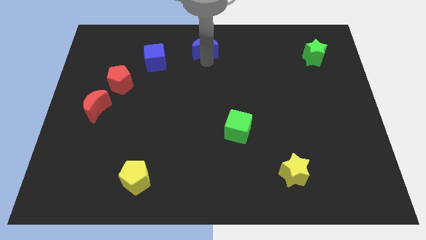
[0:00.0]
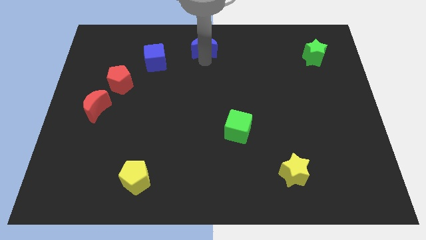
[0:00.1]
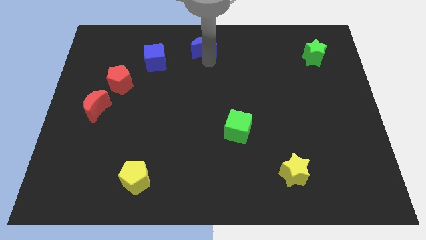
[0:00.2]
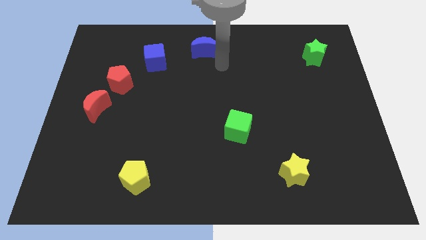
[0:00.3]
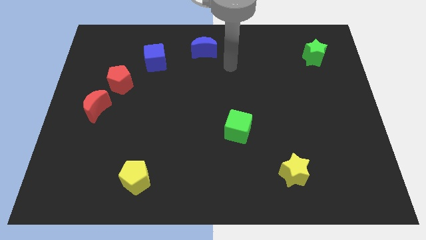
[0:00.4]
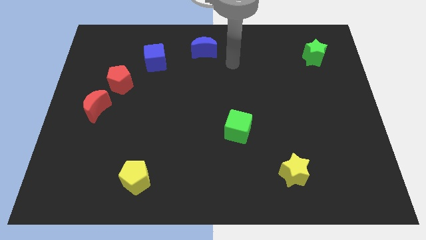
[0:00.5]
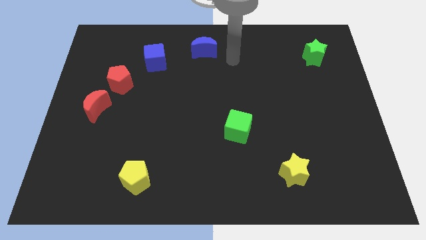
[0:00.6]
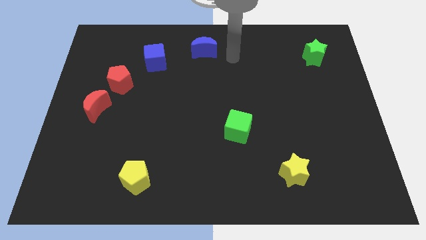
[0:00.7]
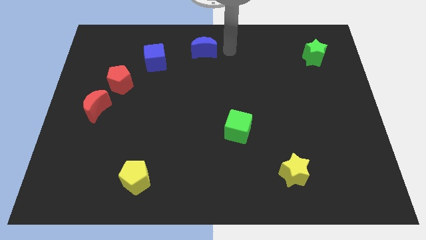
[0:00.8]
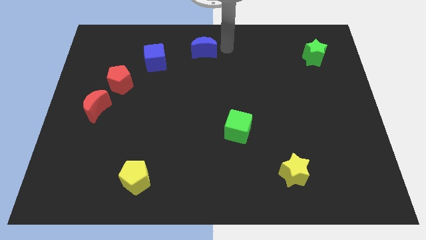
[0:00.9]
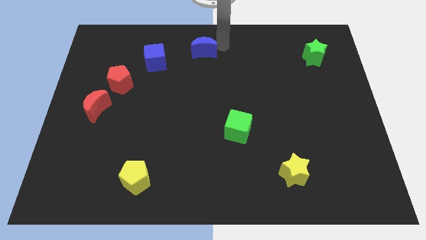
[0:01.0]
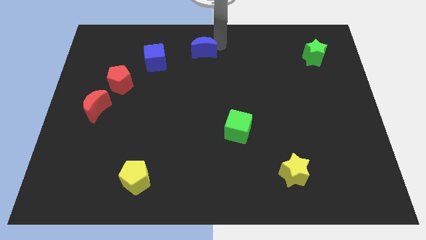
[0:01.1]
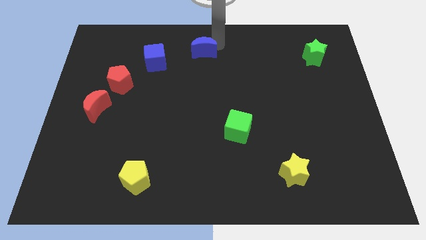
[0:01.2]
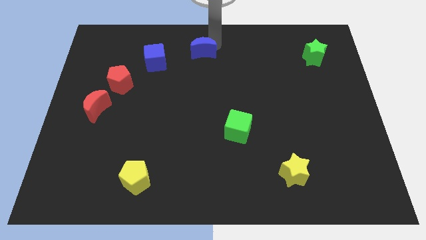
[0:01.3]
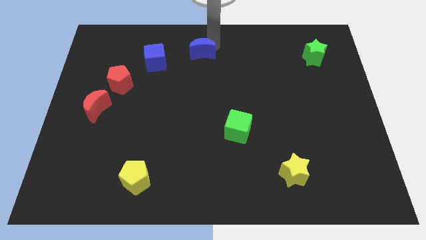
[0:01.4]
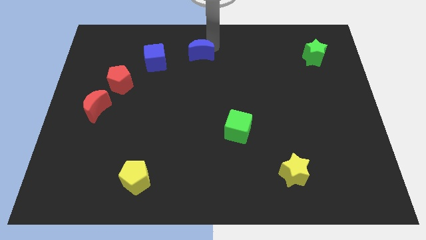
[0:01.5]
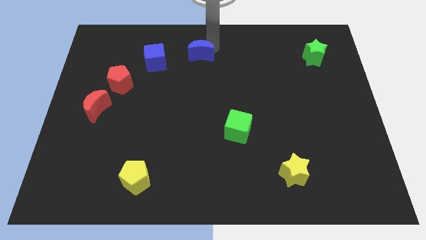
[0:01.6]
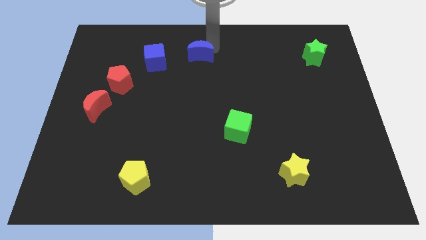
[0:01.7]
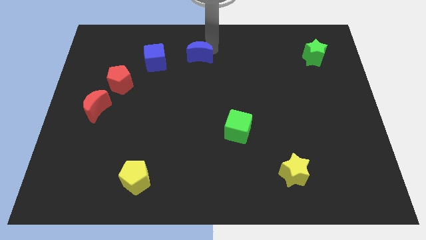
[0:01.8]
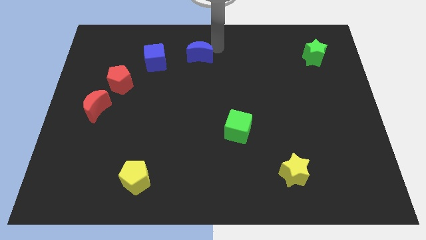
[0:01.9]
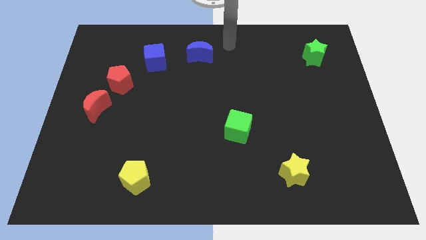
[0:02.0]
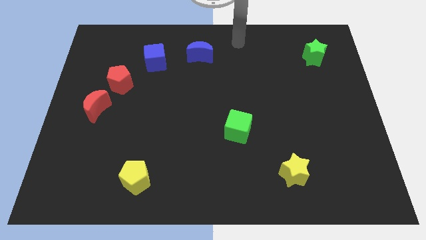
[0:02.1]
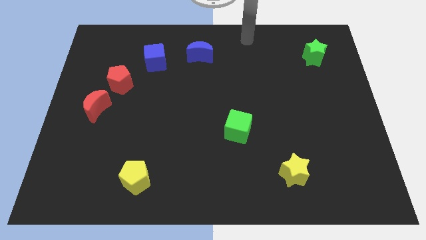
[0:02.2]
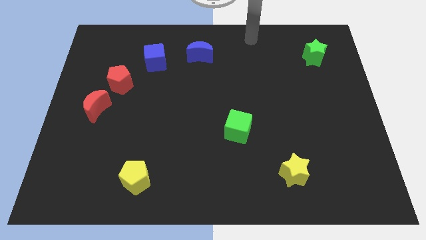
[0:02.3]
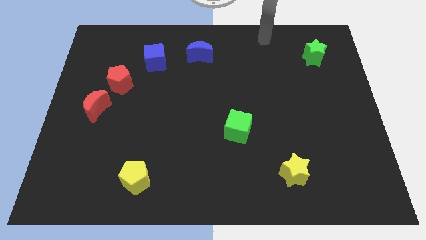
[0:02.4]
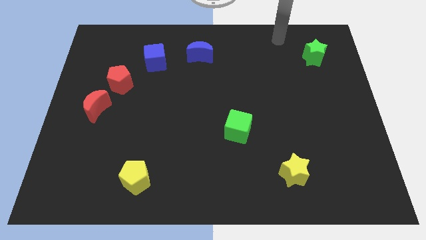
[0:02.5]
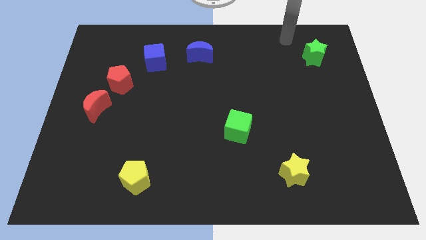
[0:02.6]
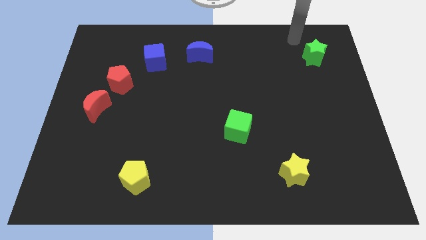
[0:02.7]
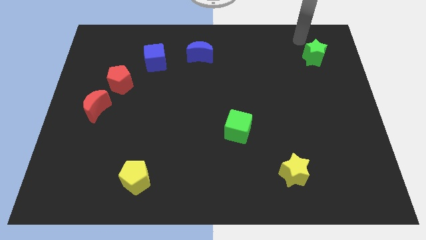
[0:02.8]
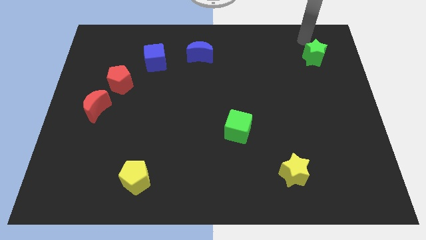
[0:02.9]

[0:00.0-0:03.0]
push blue crescent a bit more closer to the blue block

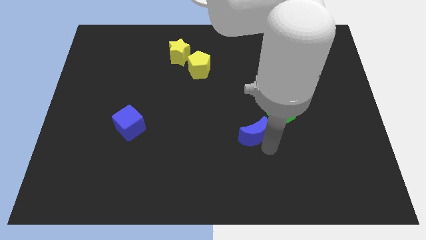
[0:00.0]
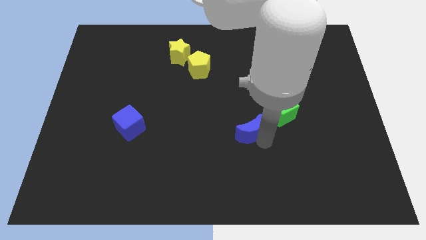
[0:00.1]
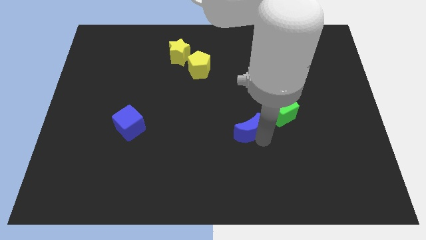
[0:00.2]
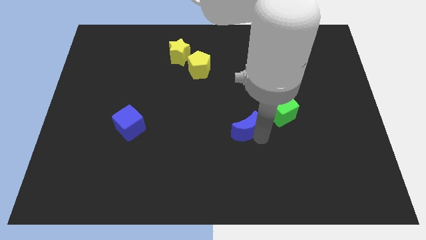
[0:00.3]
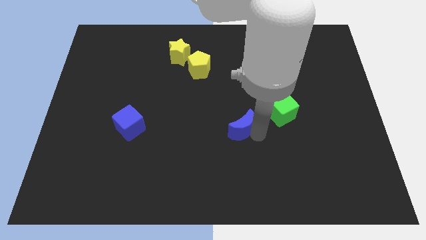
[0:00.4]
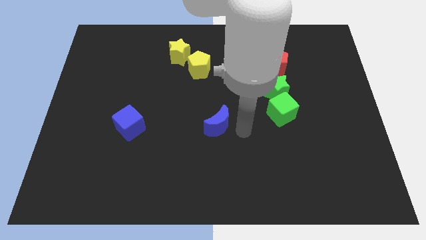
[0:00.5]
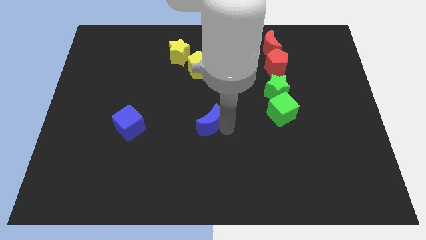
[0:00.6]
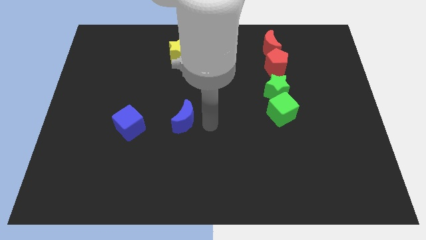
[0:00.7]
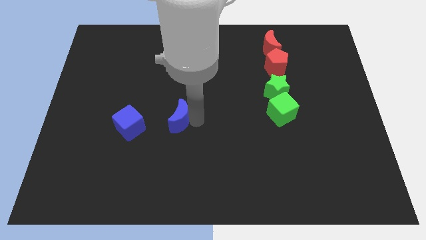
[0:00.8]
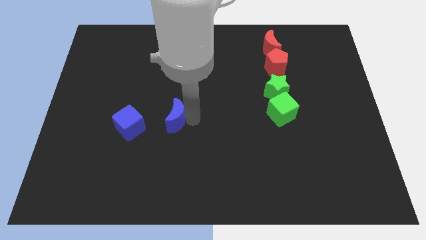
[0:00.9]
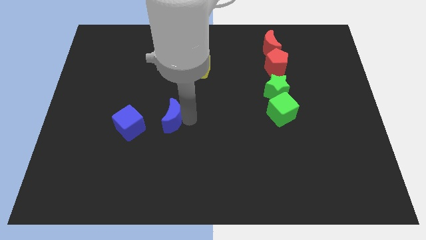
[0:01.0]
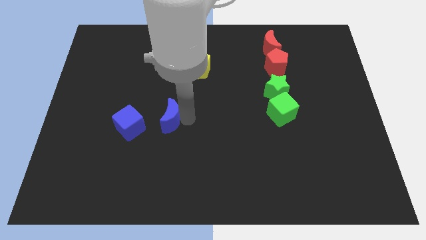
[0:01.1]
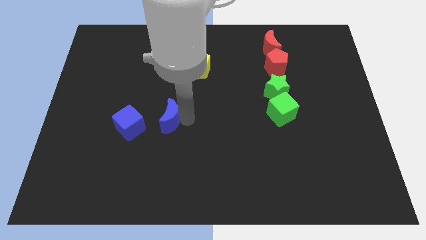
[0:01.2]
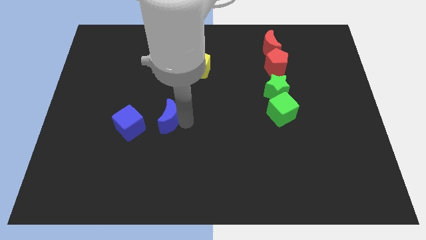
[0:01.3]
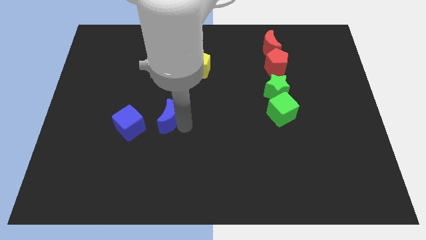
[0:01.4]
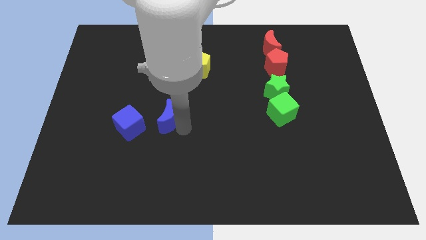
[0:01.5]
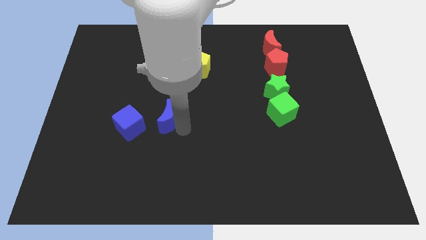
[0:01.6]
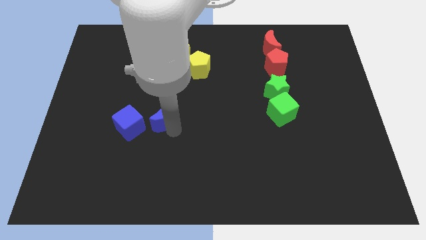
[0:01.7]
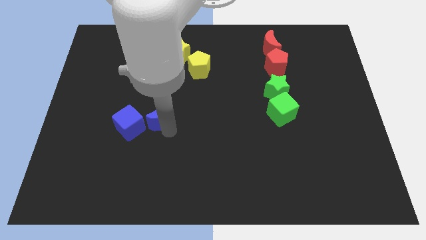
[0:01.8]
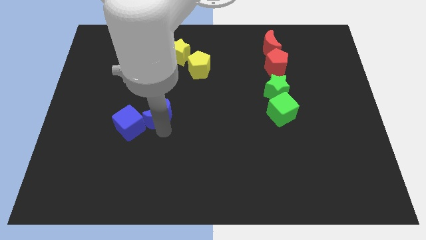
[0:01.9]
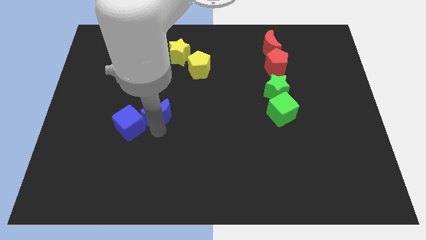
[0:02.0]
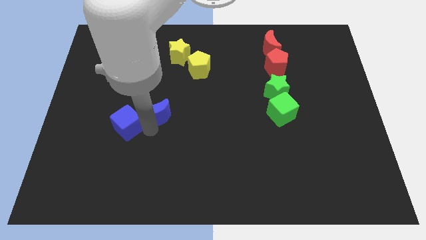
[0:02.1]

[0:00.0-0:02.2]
push the blue moon near to the blue cube

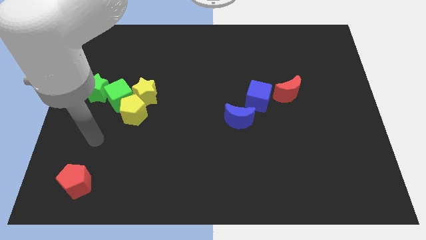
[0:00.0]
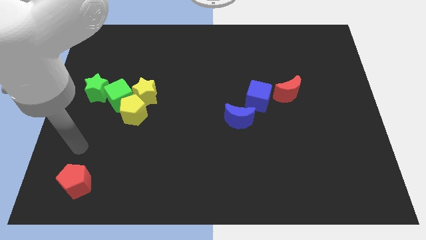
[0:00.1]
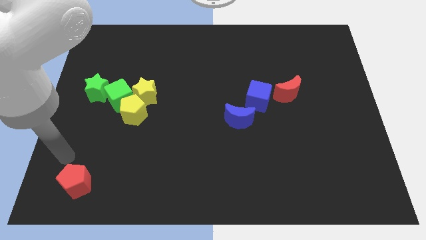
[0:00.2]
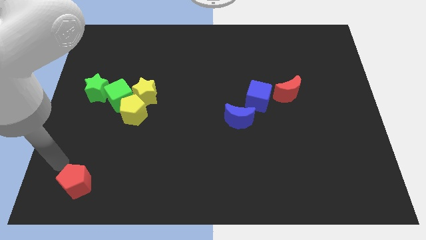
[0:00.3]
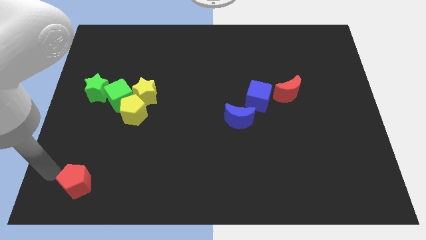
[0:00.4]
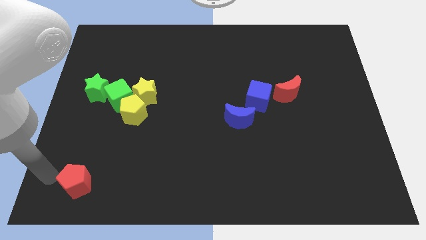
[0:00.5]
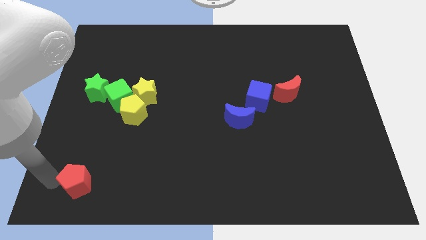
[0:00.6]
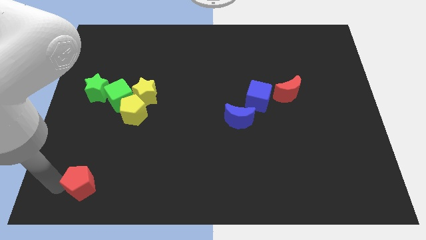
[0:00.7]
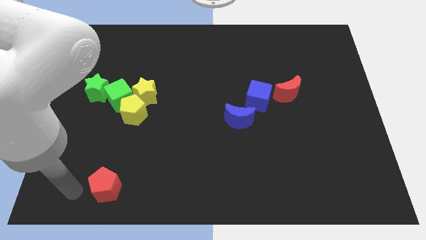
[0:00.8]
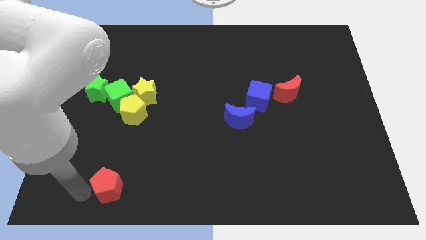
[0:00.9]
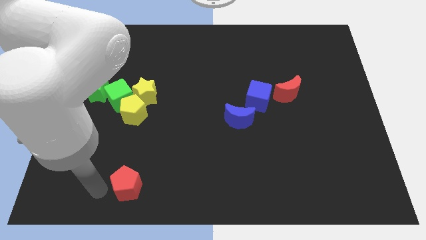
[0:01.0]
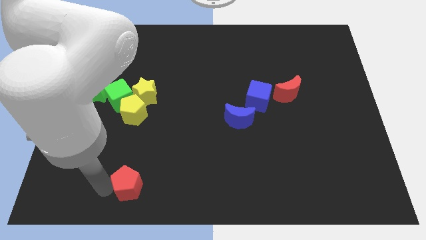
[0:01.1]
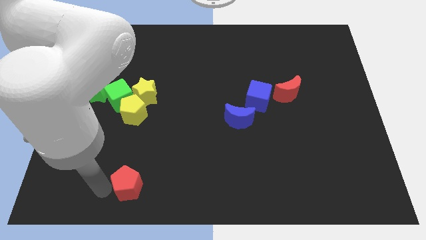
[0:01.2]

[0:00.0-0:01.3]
slightly move the red pentagon to the left center of the board

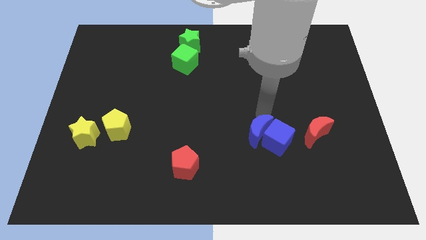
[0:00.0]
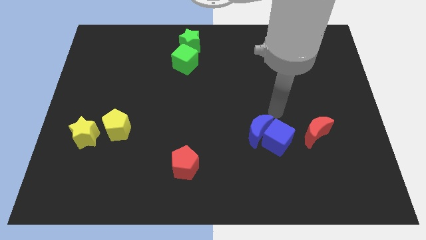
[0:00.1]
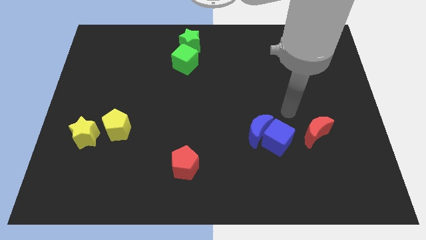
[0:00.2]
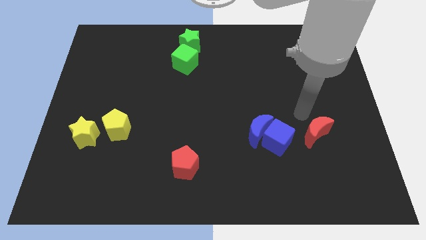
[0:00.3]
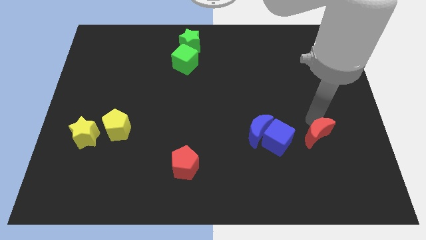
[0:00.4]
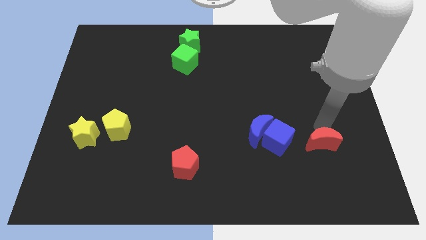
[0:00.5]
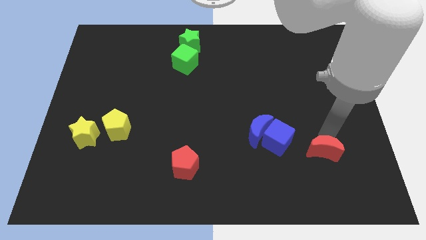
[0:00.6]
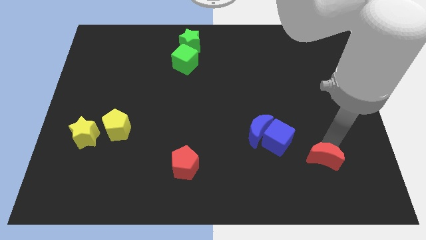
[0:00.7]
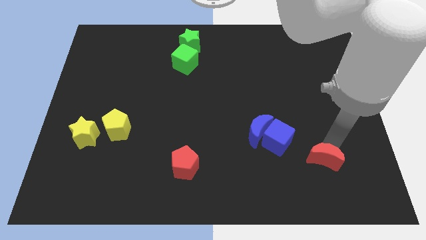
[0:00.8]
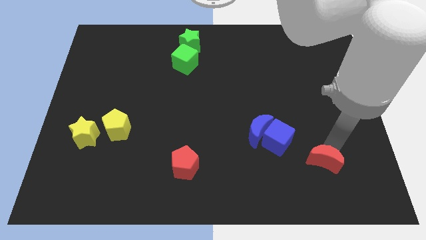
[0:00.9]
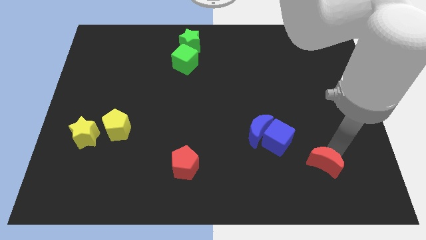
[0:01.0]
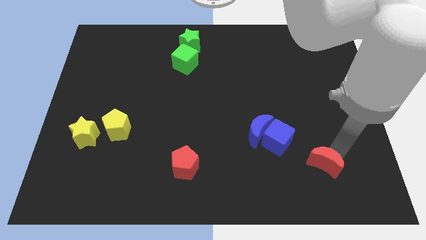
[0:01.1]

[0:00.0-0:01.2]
push the red crescent to the bottom right of the blue cube

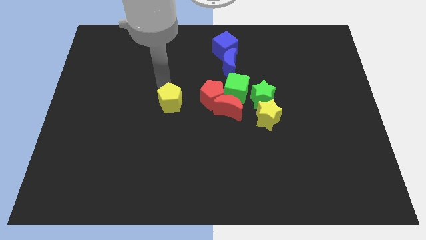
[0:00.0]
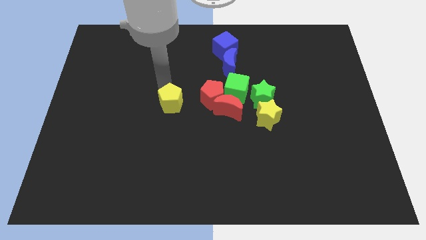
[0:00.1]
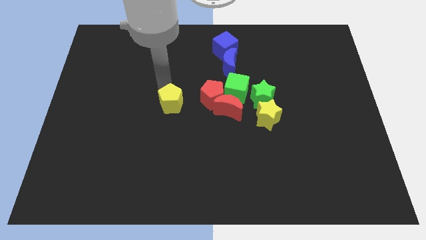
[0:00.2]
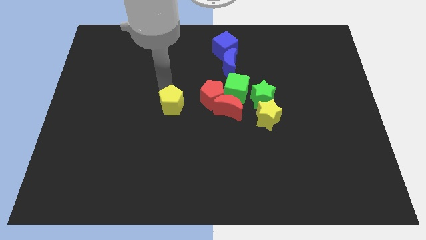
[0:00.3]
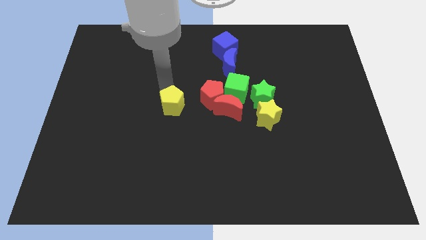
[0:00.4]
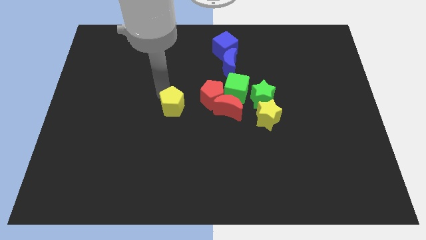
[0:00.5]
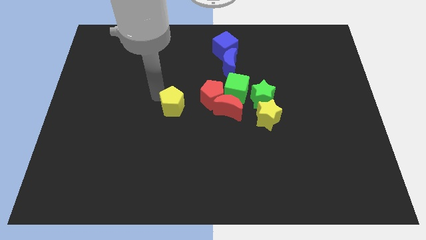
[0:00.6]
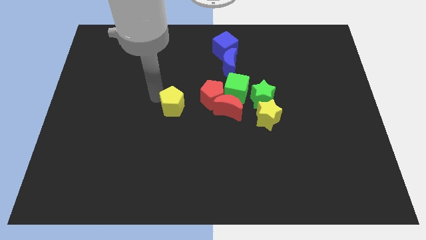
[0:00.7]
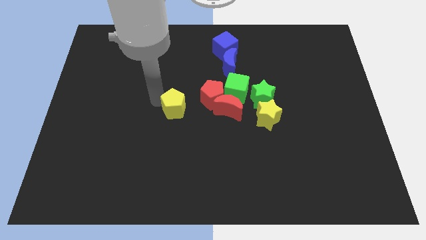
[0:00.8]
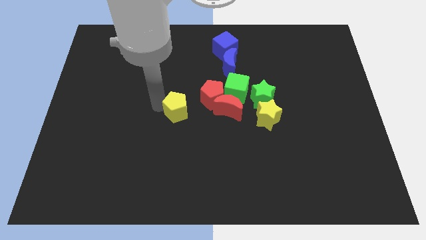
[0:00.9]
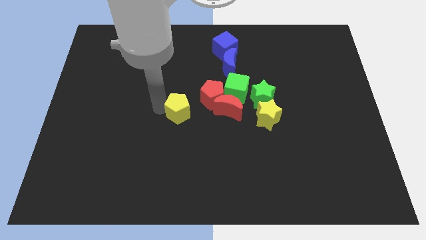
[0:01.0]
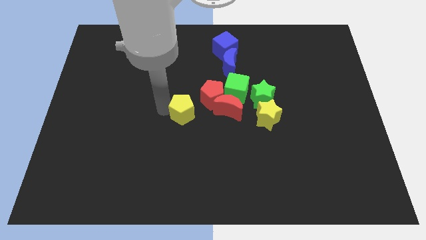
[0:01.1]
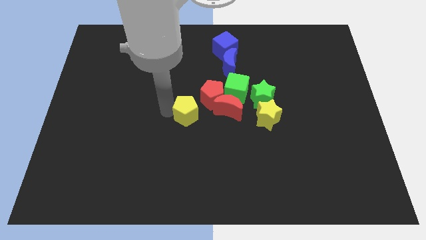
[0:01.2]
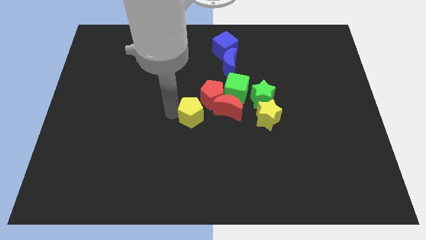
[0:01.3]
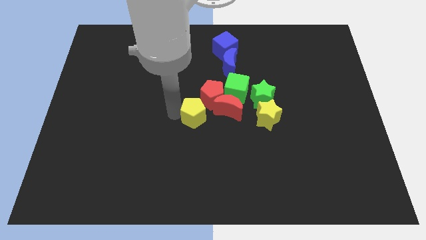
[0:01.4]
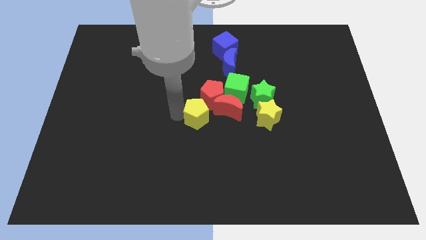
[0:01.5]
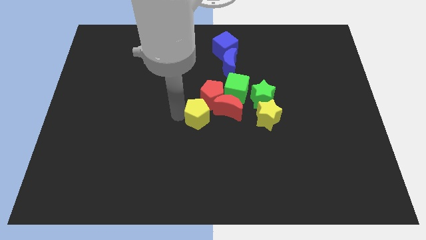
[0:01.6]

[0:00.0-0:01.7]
adjust the yellow pentagon at the bottom left of the red pentagon
